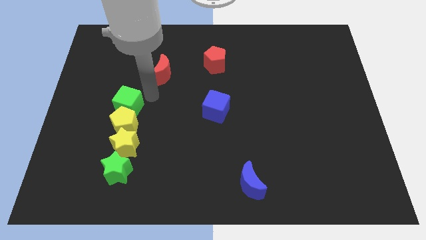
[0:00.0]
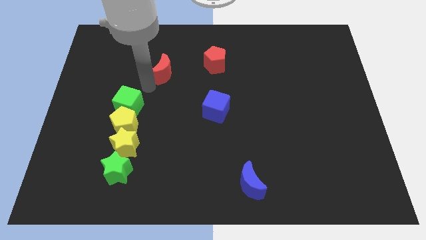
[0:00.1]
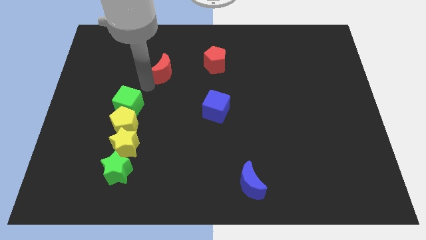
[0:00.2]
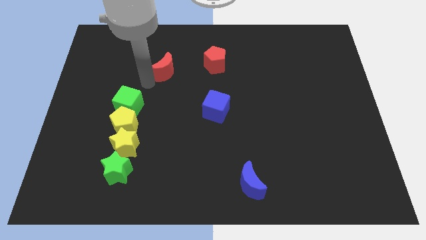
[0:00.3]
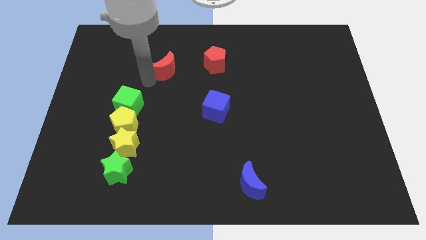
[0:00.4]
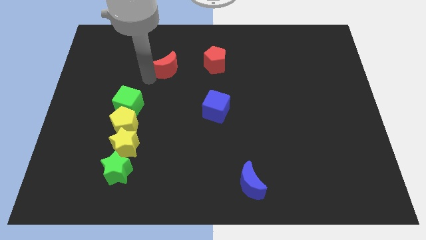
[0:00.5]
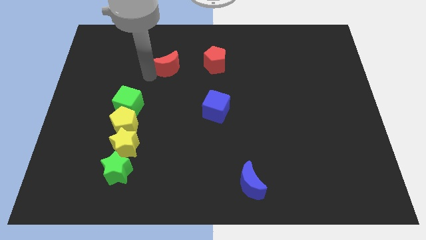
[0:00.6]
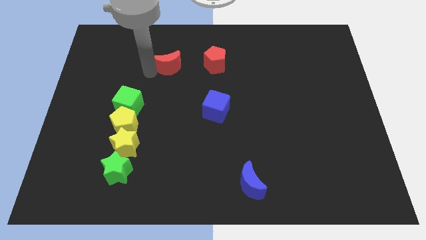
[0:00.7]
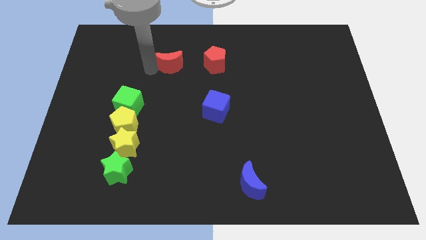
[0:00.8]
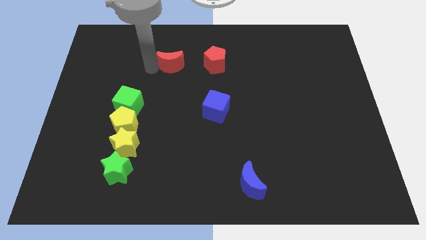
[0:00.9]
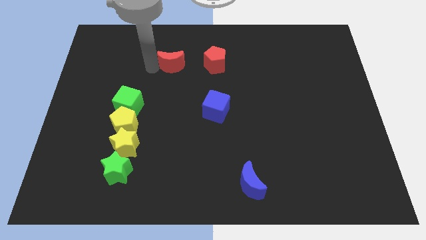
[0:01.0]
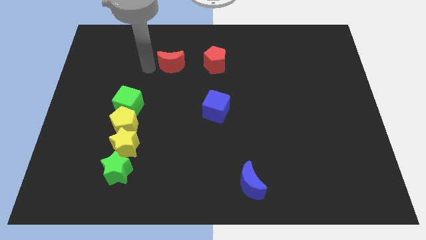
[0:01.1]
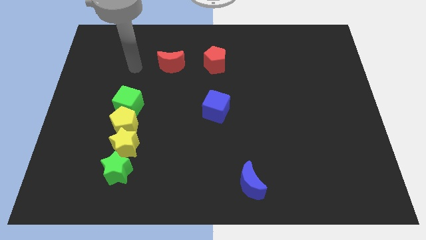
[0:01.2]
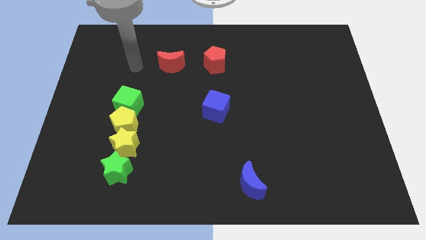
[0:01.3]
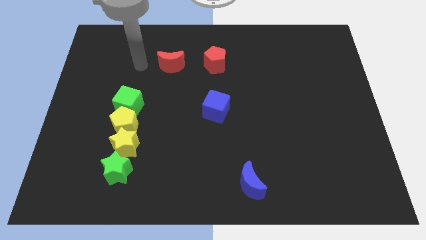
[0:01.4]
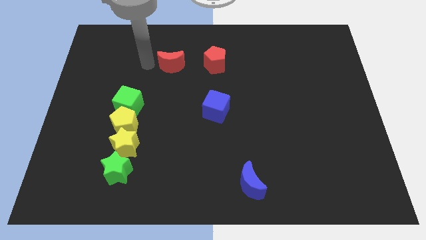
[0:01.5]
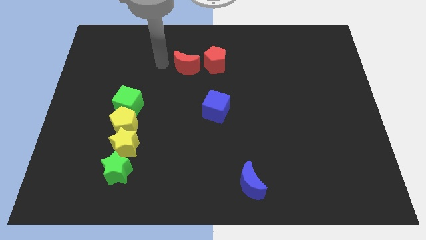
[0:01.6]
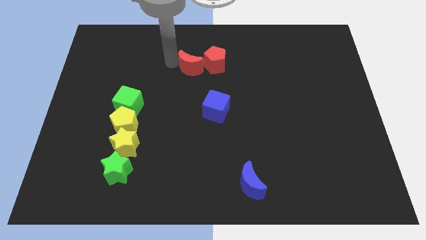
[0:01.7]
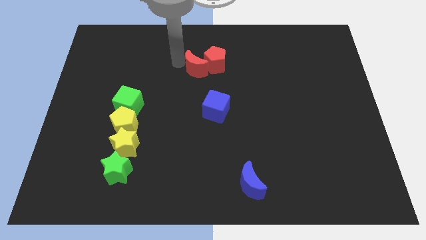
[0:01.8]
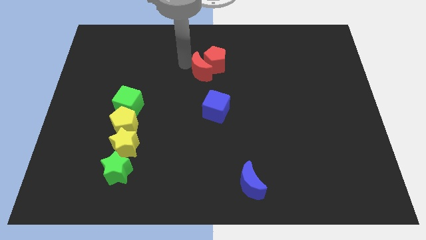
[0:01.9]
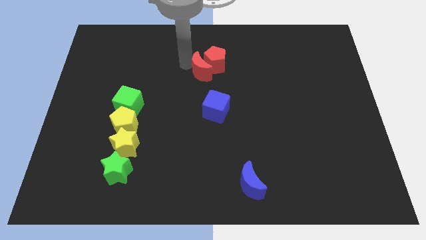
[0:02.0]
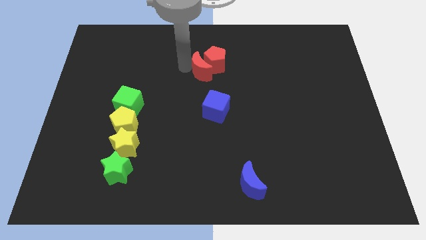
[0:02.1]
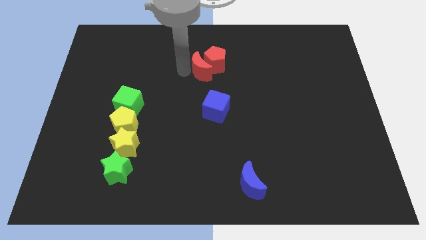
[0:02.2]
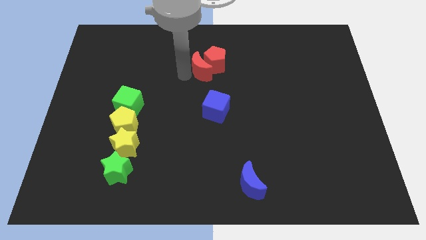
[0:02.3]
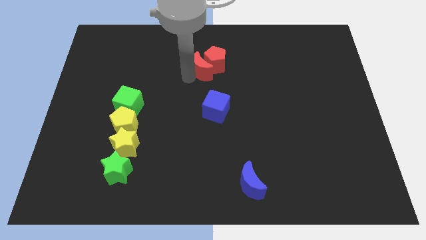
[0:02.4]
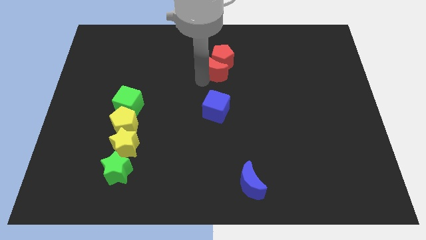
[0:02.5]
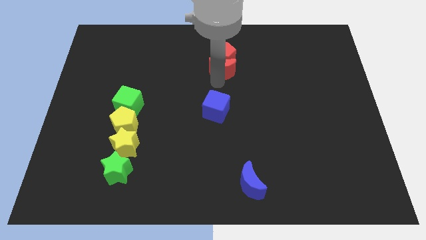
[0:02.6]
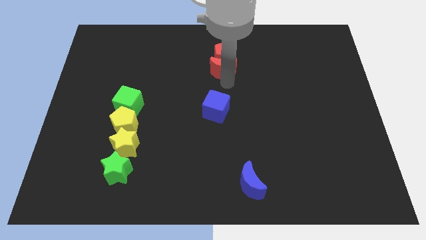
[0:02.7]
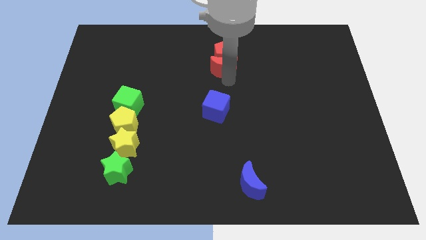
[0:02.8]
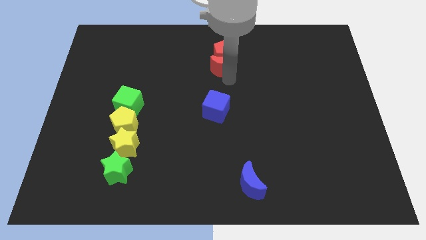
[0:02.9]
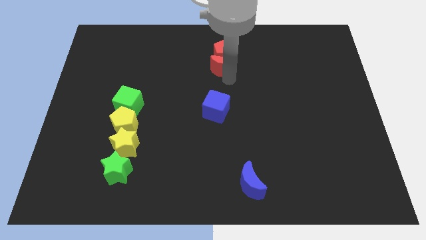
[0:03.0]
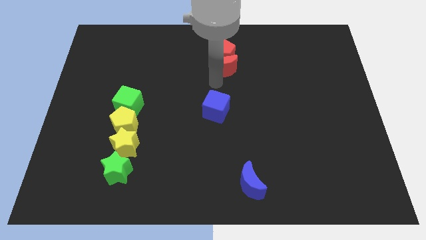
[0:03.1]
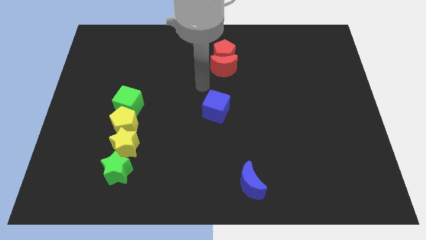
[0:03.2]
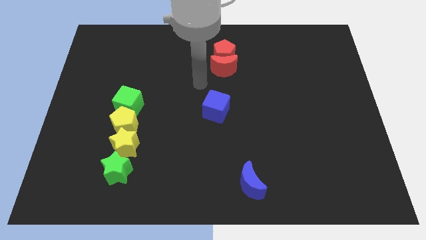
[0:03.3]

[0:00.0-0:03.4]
move the red moon into the red pentagon below at the top center

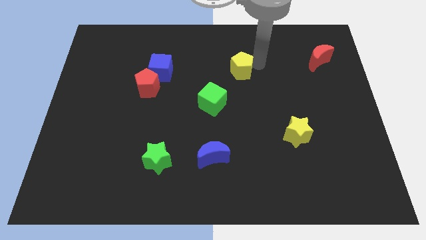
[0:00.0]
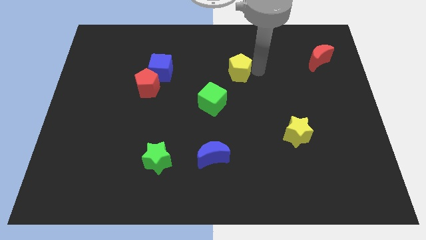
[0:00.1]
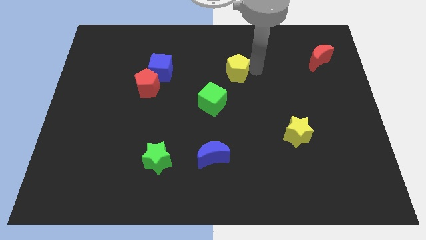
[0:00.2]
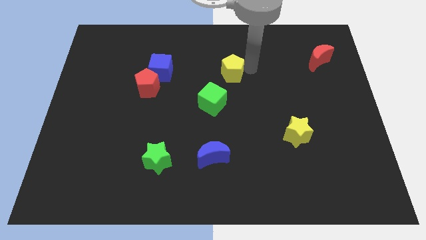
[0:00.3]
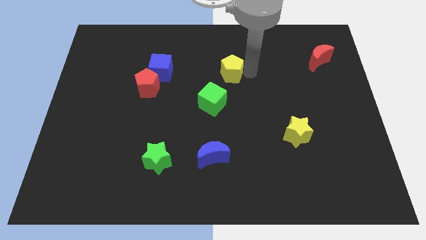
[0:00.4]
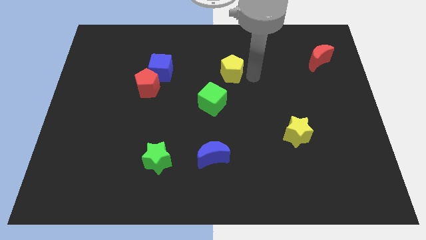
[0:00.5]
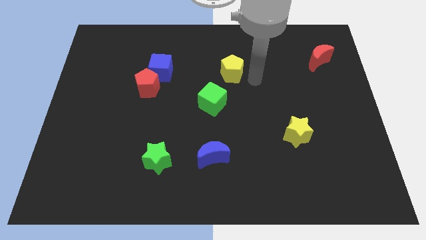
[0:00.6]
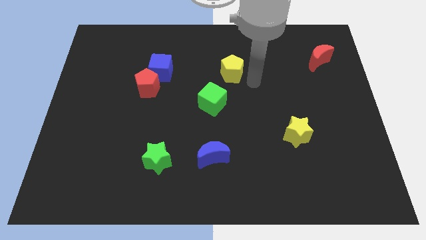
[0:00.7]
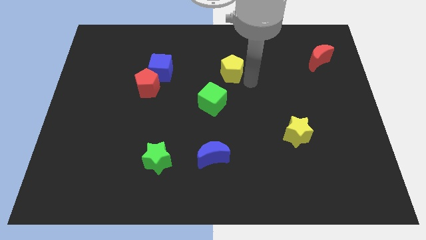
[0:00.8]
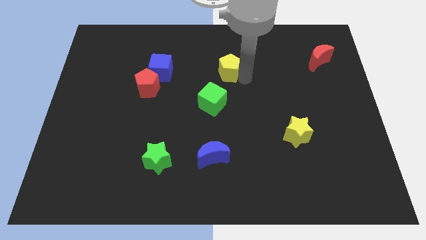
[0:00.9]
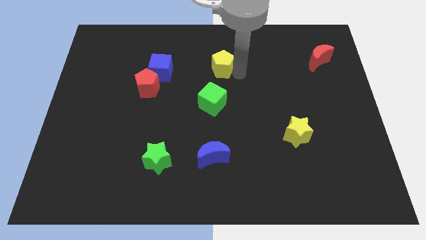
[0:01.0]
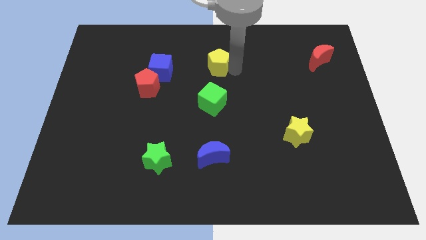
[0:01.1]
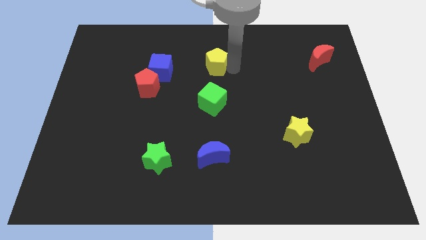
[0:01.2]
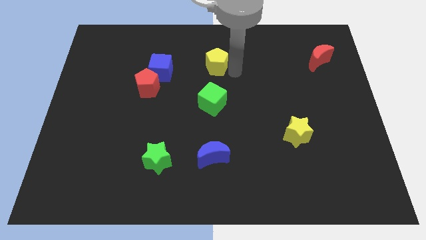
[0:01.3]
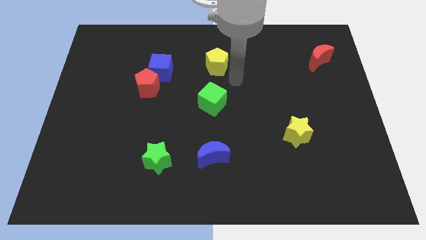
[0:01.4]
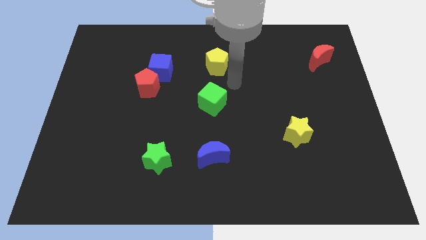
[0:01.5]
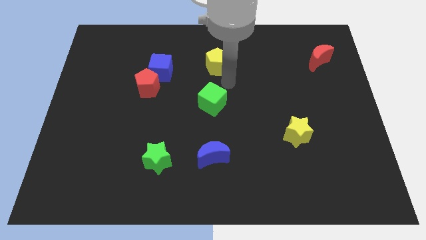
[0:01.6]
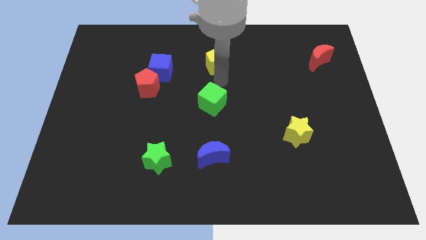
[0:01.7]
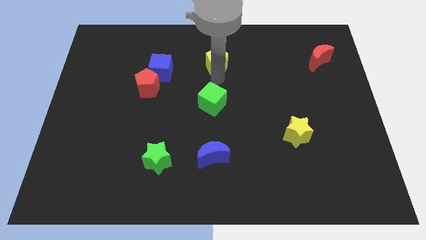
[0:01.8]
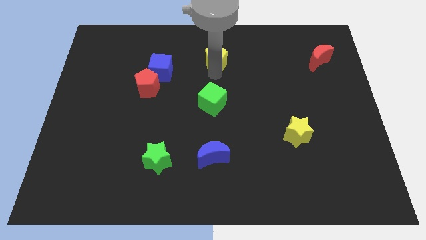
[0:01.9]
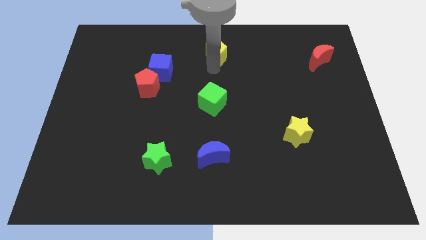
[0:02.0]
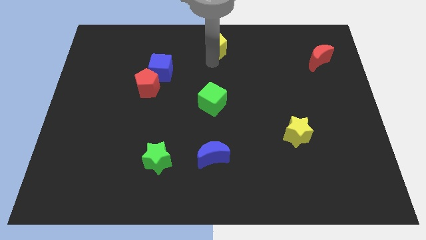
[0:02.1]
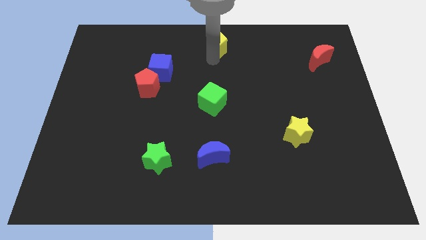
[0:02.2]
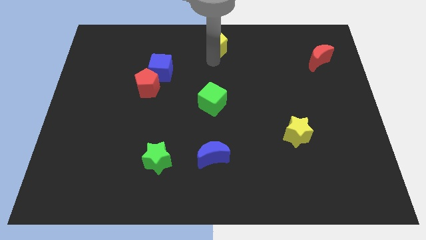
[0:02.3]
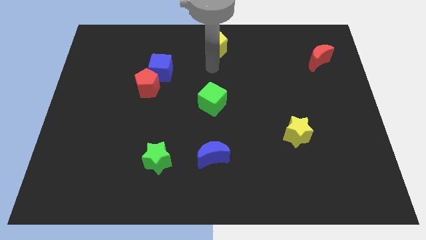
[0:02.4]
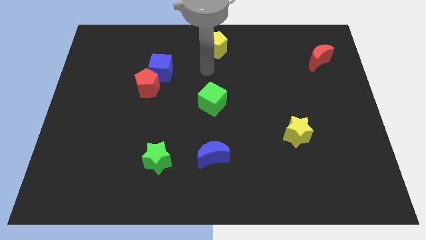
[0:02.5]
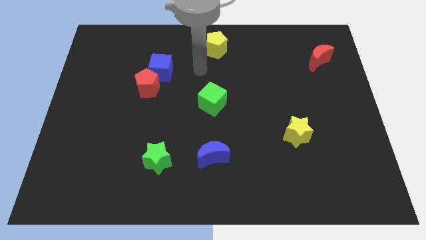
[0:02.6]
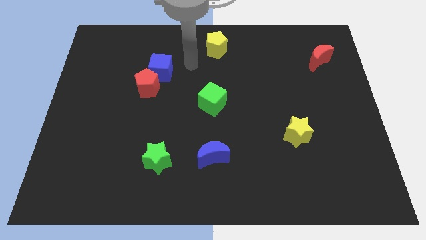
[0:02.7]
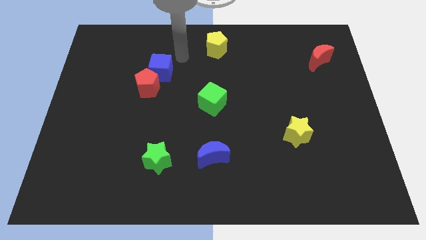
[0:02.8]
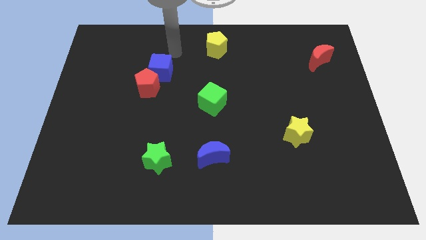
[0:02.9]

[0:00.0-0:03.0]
move the yellow pentagon to the top center of the board

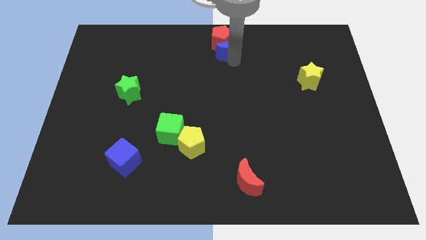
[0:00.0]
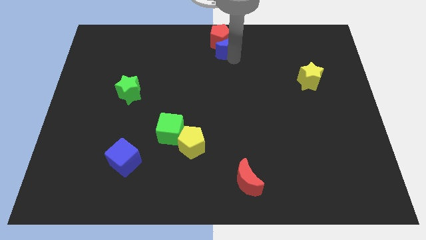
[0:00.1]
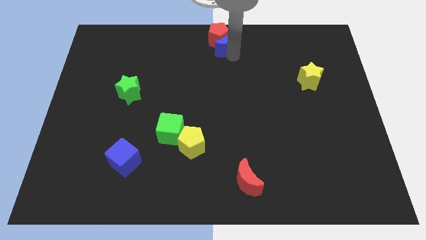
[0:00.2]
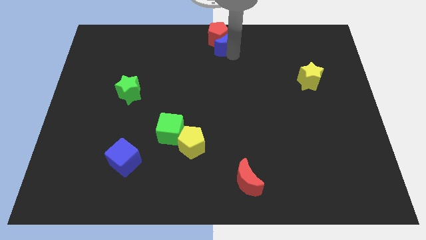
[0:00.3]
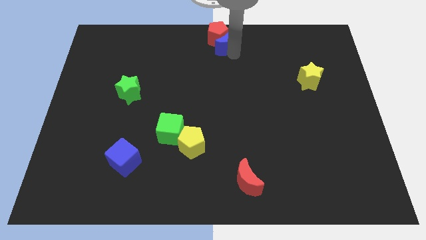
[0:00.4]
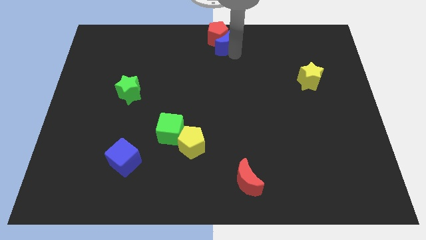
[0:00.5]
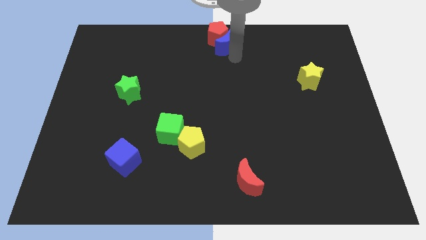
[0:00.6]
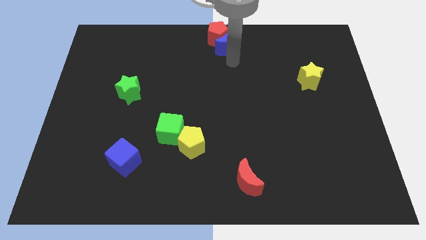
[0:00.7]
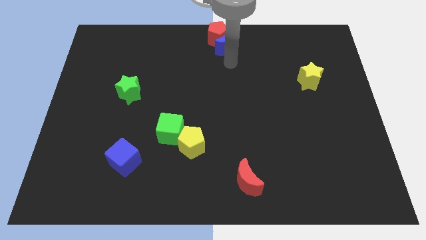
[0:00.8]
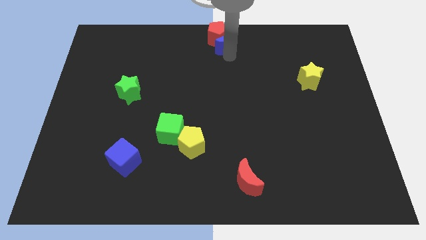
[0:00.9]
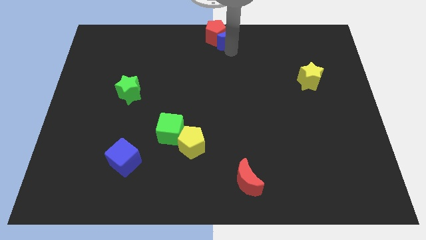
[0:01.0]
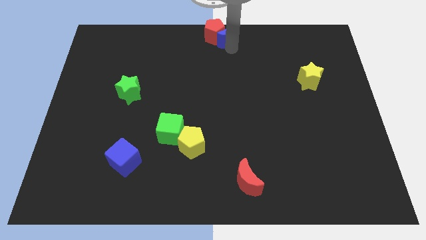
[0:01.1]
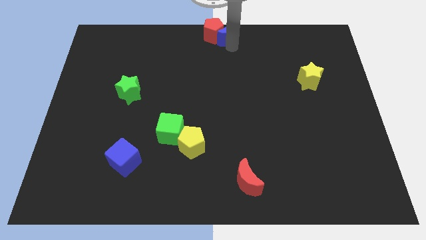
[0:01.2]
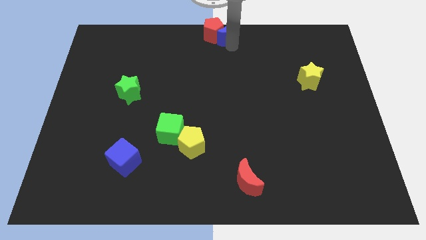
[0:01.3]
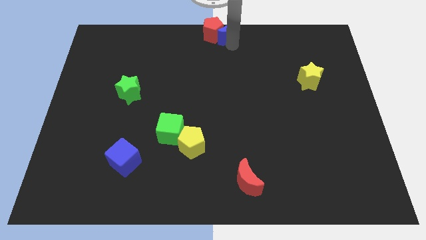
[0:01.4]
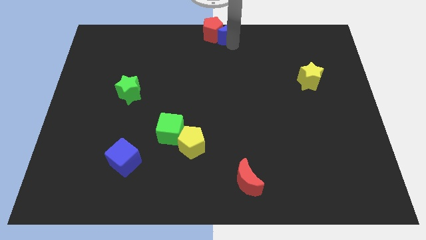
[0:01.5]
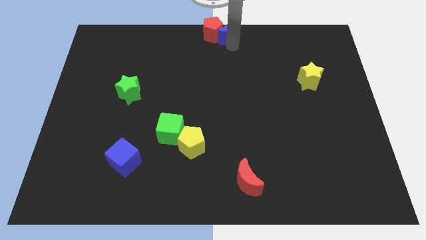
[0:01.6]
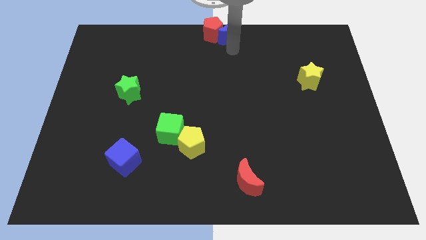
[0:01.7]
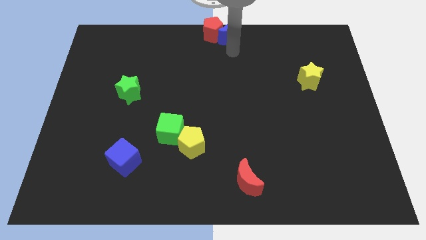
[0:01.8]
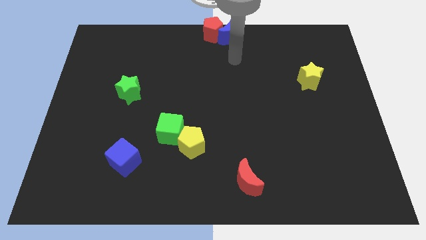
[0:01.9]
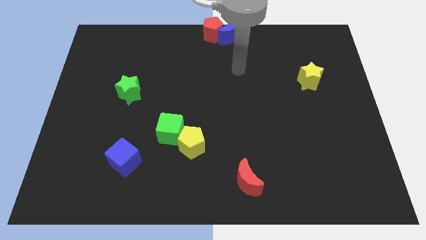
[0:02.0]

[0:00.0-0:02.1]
adjust the red pentagon and blue crescent to top center

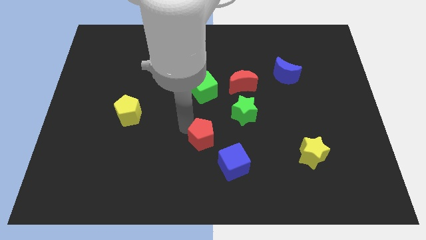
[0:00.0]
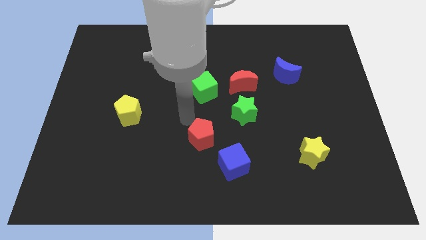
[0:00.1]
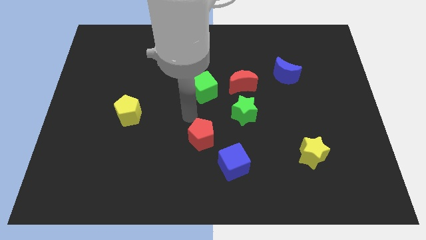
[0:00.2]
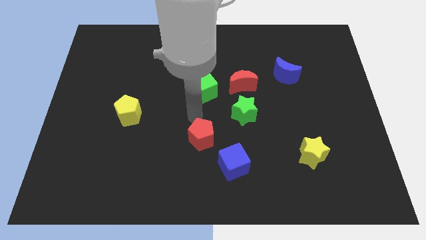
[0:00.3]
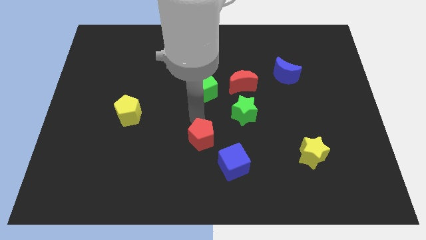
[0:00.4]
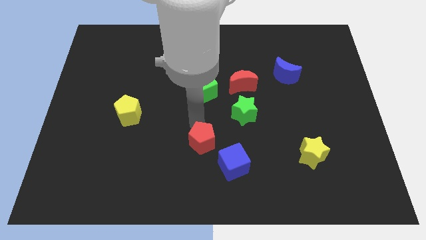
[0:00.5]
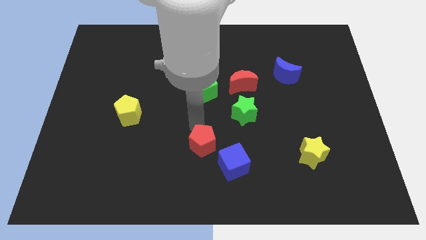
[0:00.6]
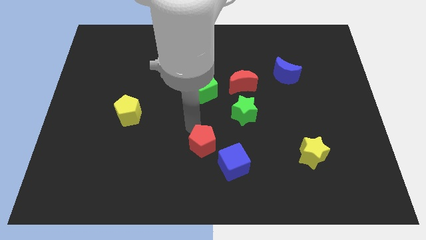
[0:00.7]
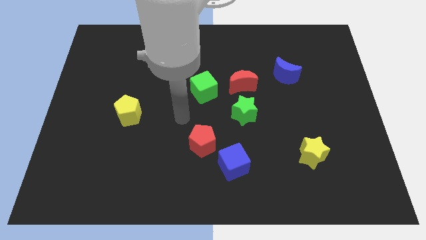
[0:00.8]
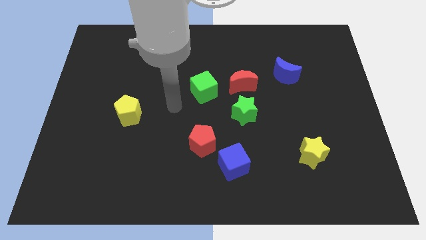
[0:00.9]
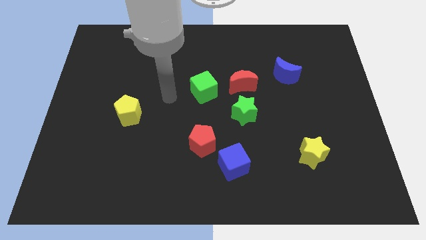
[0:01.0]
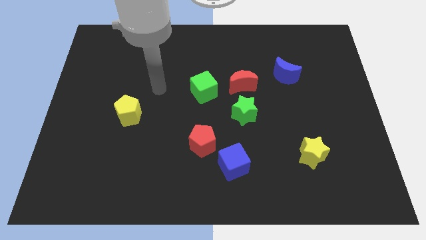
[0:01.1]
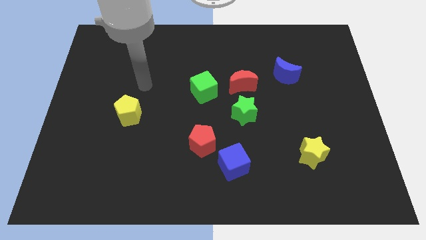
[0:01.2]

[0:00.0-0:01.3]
push the red pentagon towards the blue cube on the bottom right of the board
